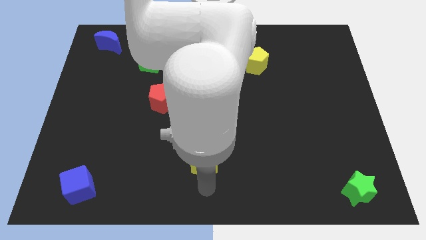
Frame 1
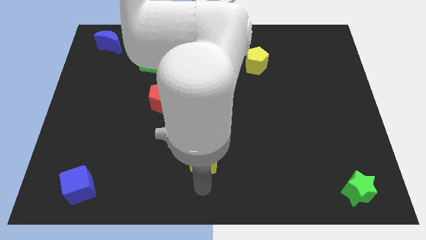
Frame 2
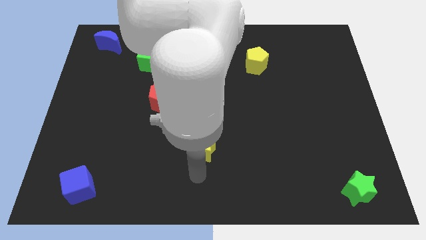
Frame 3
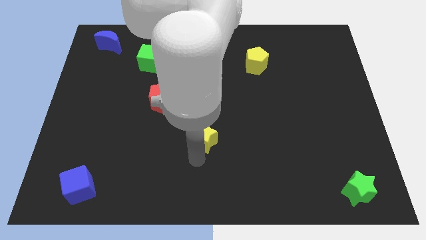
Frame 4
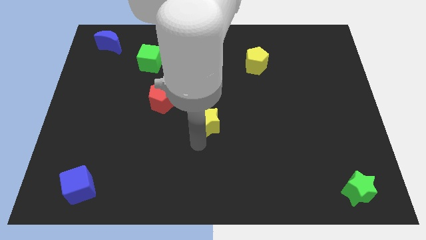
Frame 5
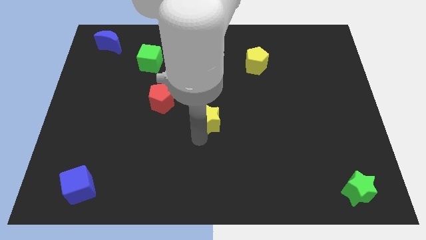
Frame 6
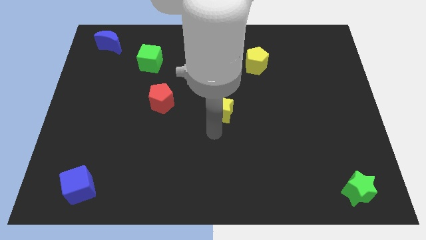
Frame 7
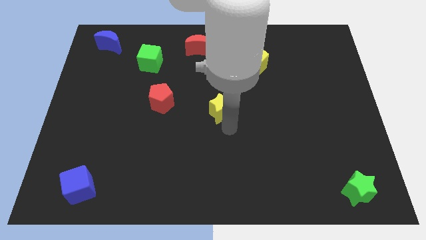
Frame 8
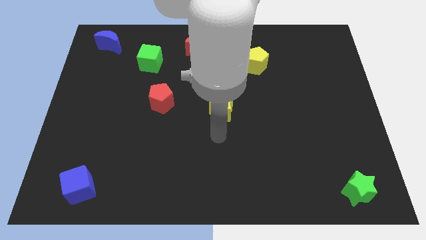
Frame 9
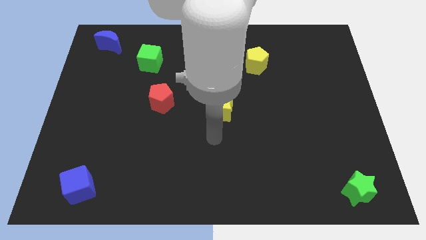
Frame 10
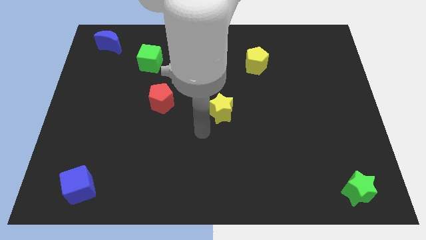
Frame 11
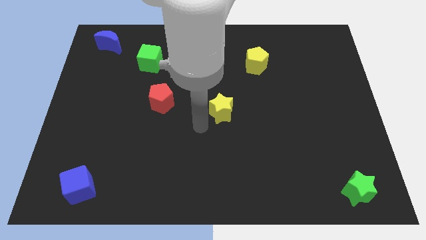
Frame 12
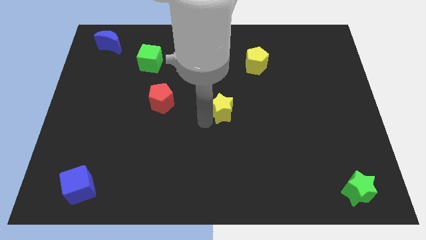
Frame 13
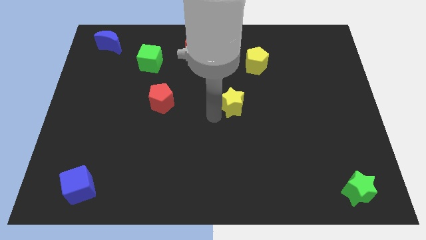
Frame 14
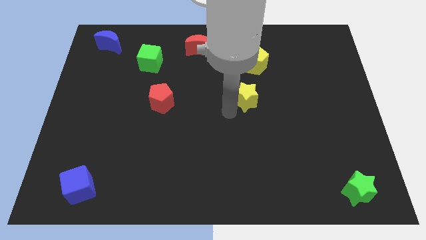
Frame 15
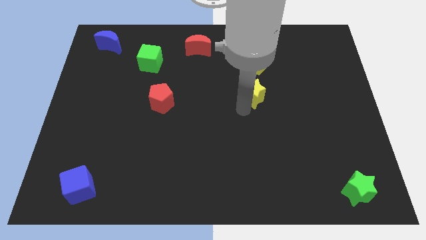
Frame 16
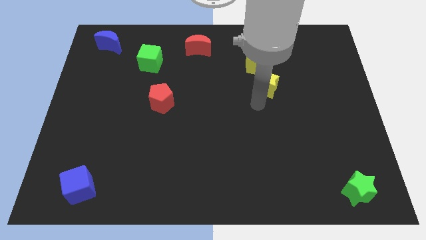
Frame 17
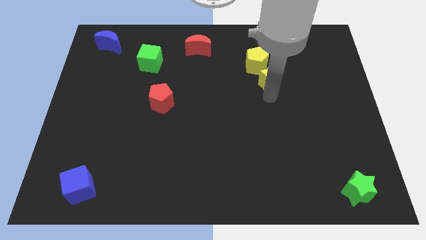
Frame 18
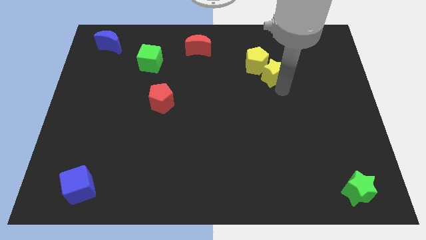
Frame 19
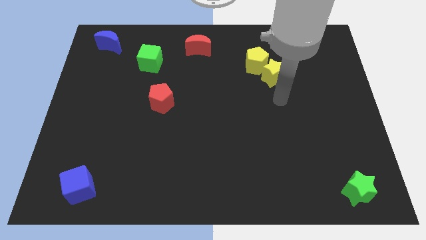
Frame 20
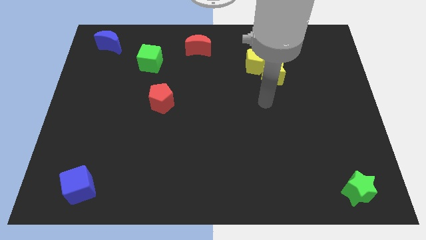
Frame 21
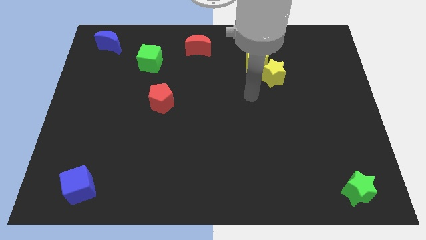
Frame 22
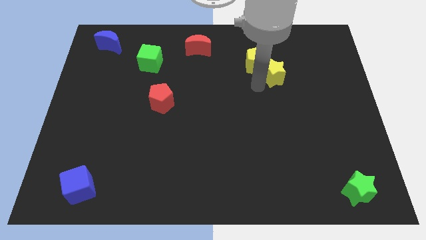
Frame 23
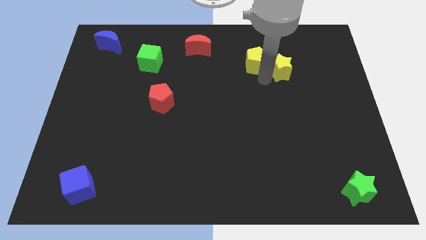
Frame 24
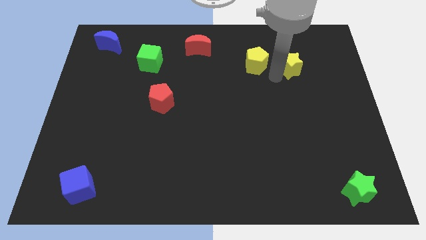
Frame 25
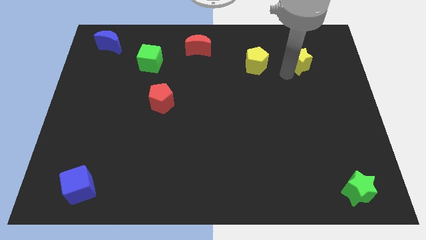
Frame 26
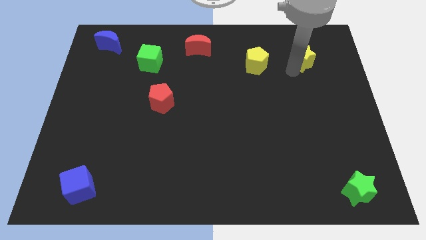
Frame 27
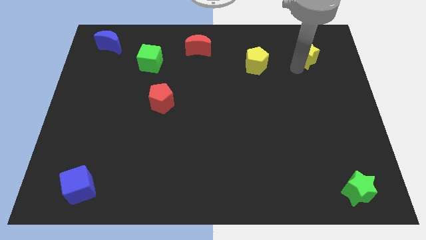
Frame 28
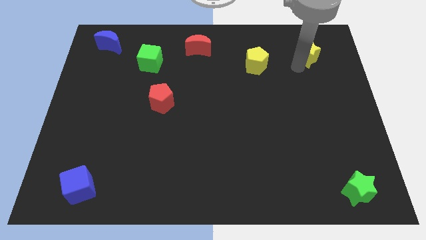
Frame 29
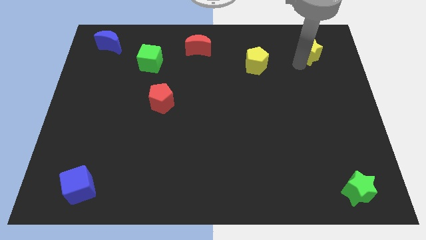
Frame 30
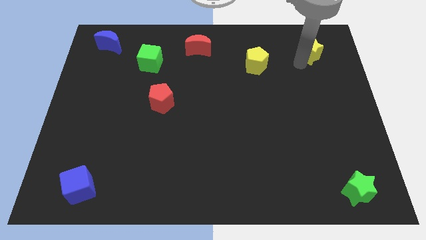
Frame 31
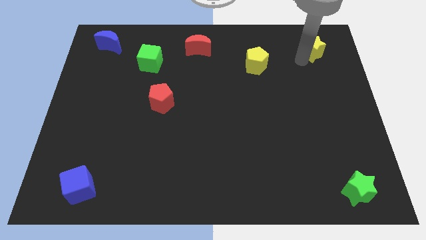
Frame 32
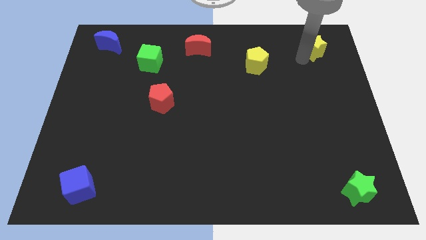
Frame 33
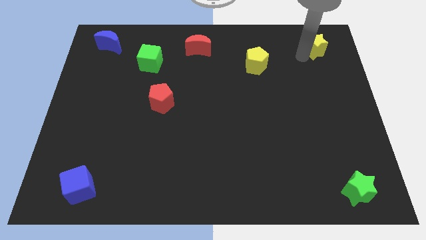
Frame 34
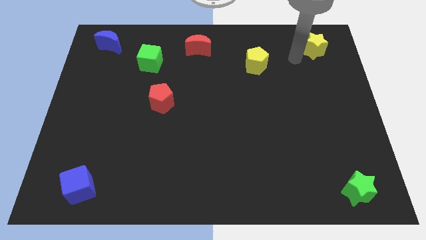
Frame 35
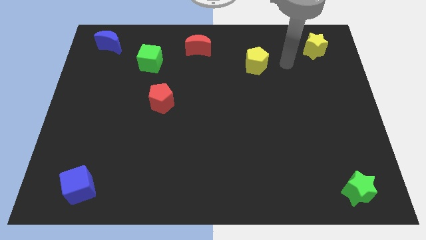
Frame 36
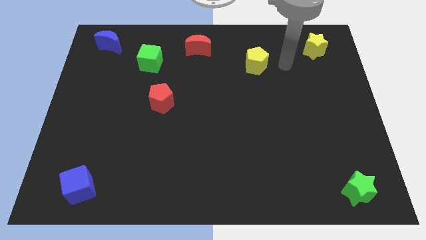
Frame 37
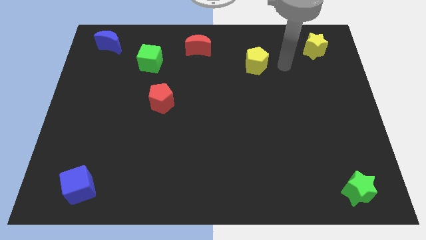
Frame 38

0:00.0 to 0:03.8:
push the yellow star towards the top right corner

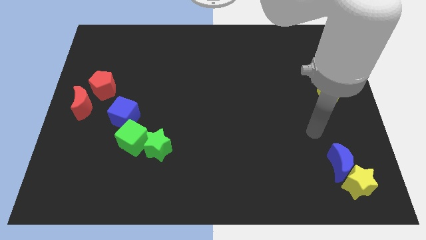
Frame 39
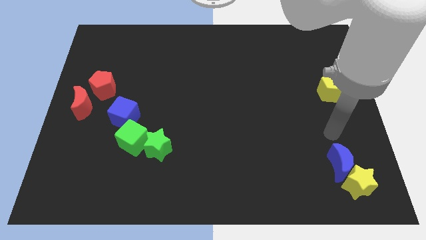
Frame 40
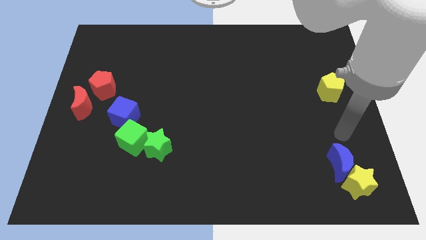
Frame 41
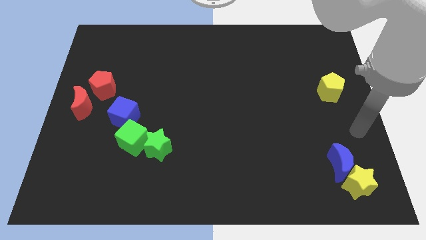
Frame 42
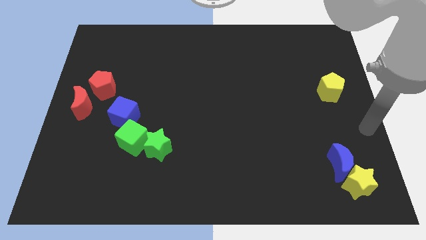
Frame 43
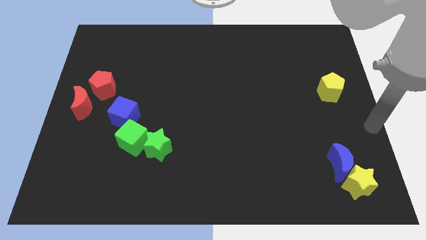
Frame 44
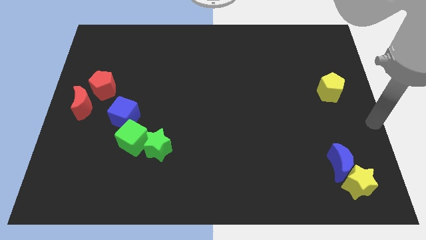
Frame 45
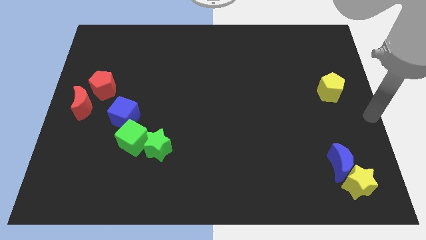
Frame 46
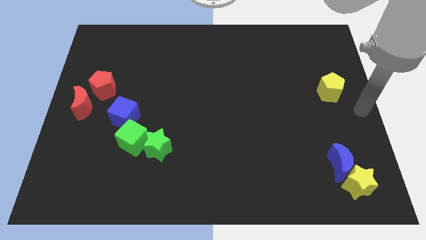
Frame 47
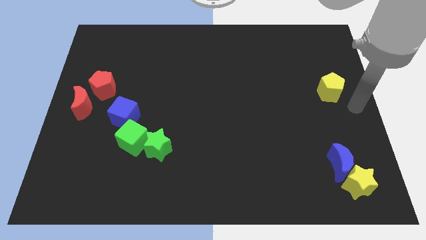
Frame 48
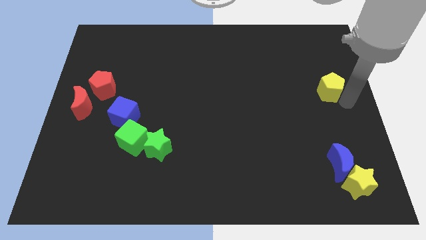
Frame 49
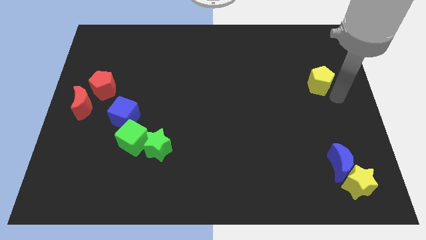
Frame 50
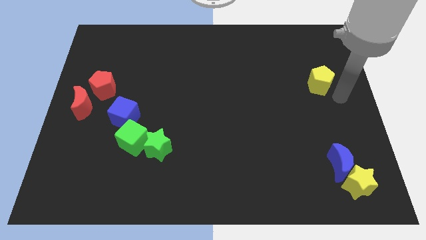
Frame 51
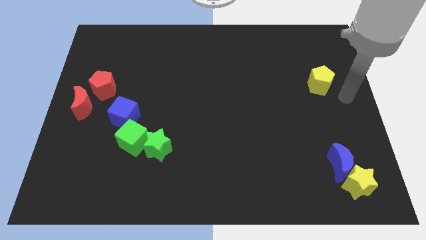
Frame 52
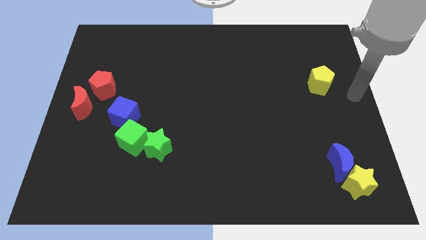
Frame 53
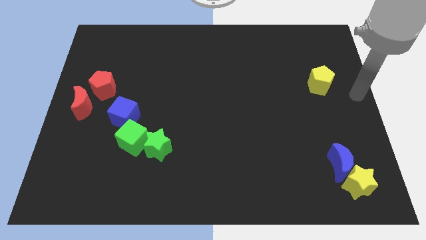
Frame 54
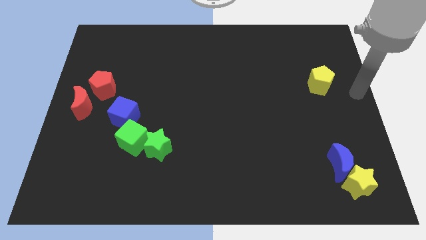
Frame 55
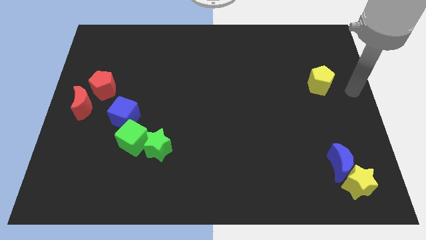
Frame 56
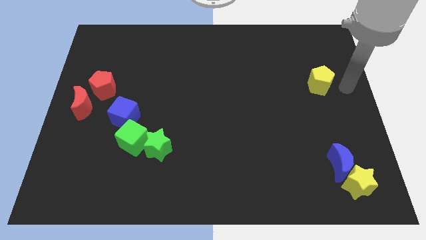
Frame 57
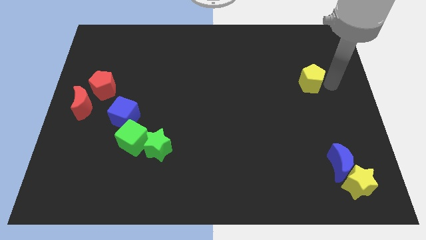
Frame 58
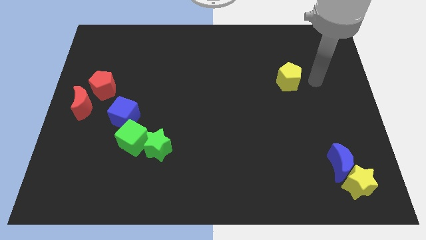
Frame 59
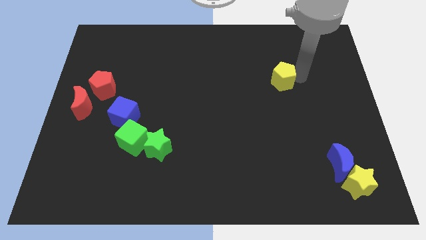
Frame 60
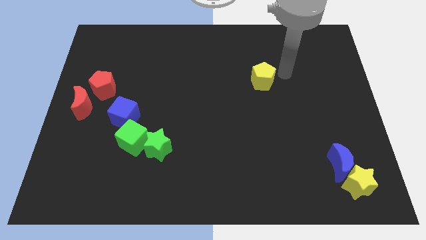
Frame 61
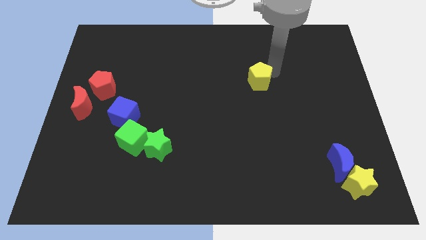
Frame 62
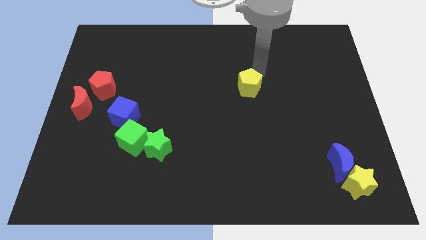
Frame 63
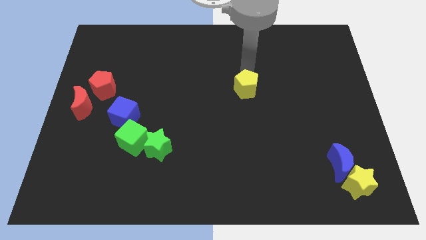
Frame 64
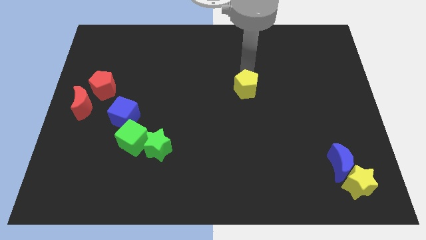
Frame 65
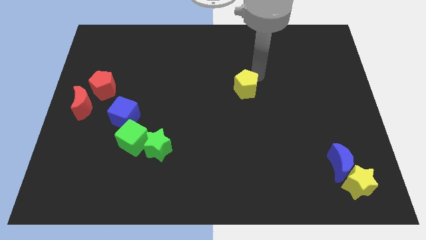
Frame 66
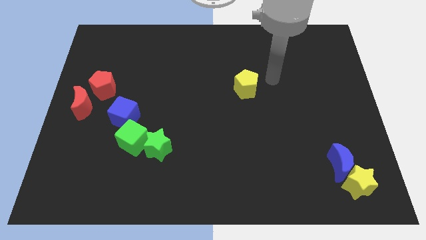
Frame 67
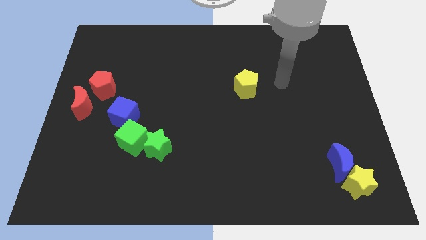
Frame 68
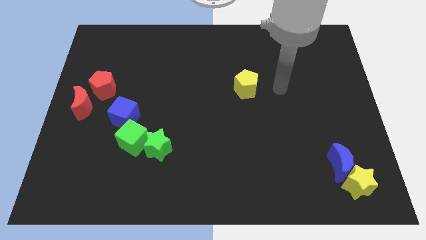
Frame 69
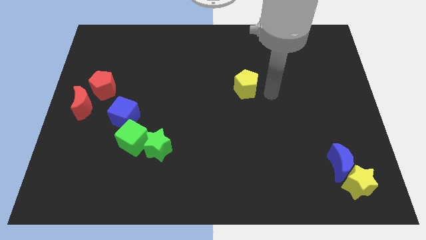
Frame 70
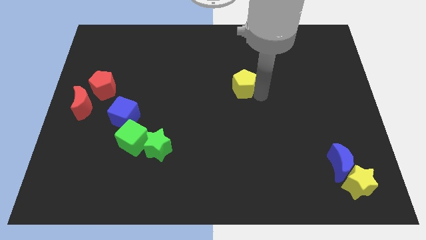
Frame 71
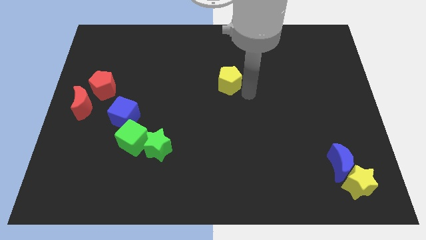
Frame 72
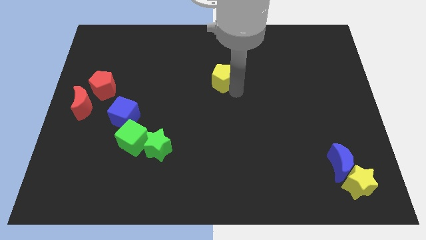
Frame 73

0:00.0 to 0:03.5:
move the yellow pentagon towards the center of the board

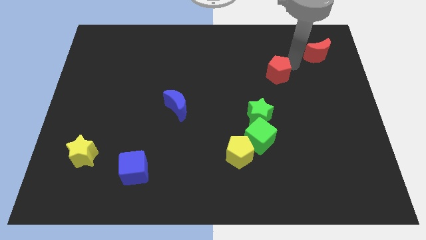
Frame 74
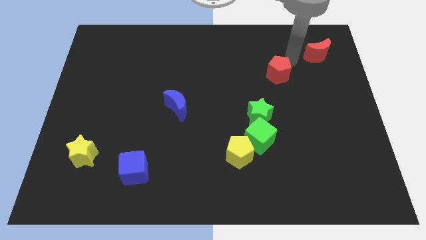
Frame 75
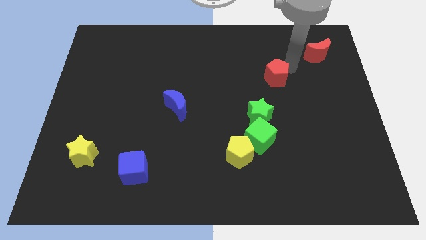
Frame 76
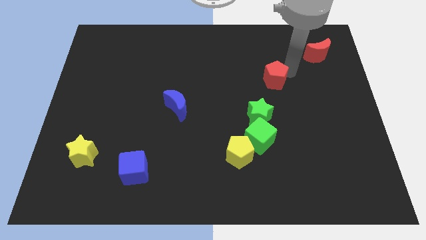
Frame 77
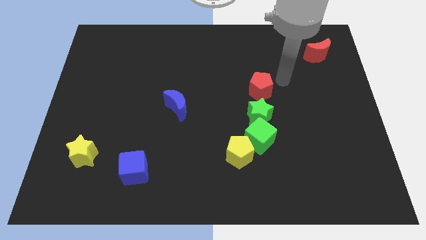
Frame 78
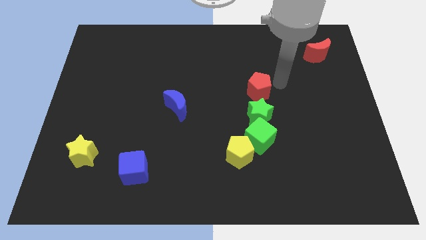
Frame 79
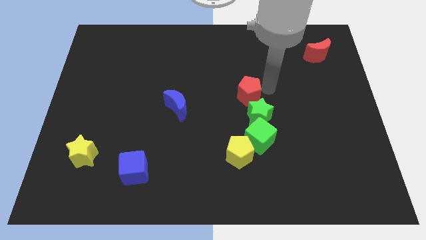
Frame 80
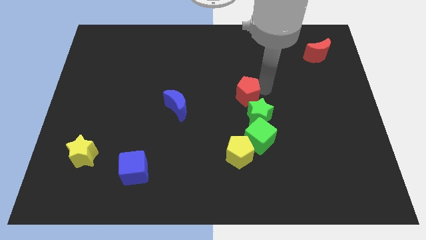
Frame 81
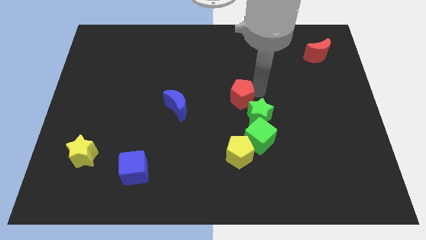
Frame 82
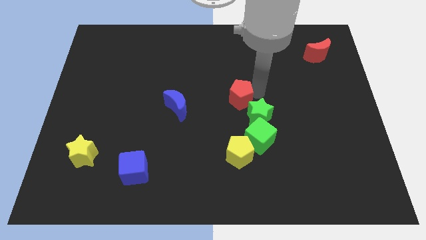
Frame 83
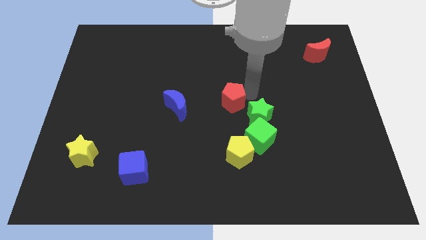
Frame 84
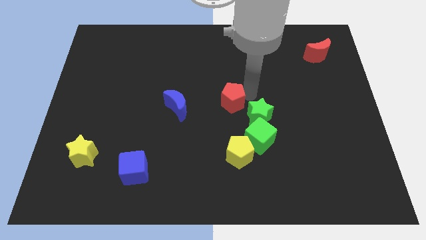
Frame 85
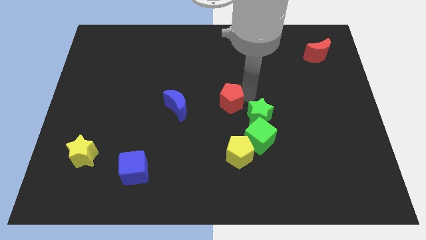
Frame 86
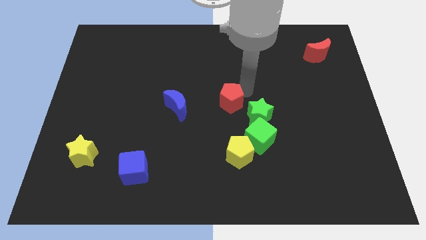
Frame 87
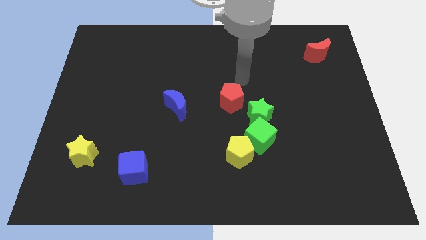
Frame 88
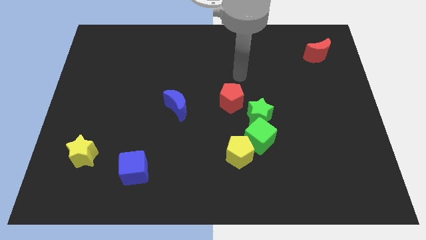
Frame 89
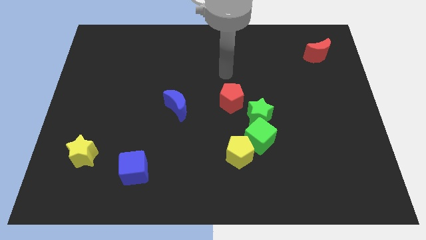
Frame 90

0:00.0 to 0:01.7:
place the red pentagon at the top left side of green star
